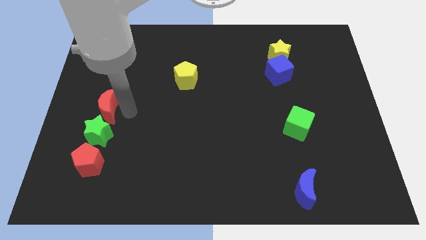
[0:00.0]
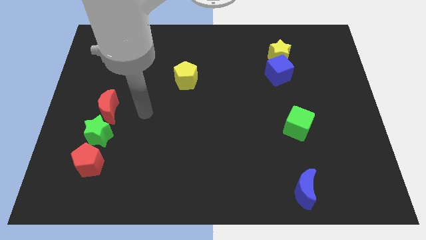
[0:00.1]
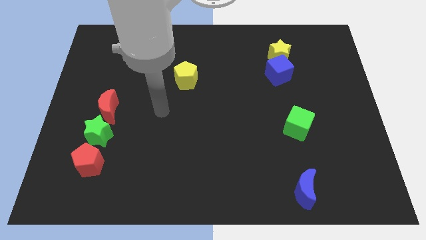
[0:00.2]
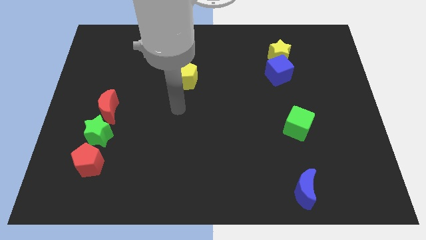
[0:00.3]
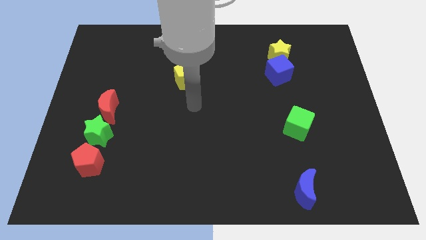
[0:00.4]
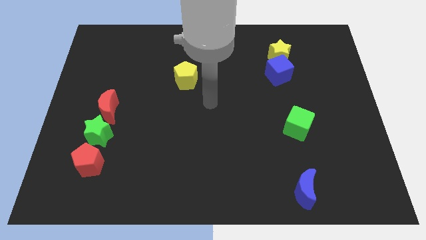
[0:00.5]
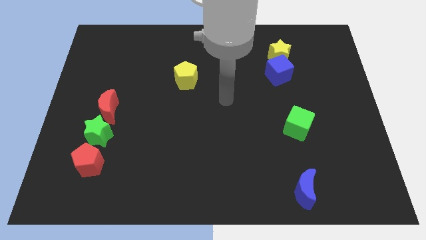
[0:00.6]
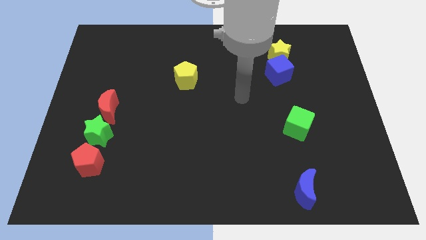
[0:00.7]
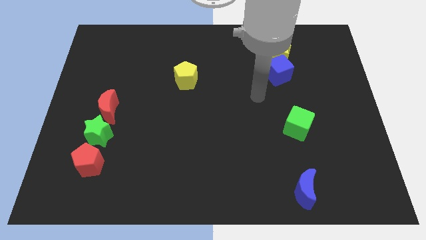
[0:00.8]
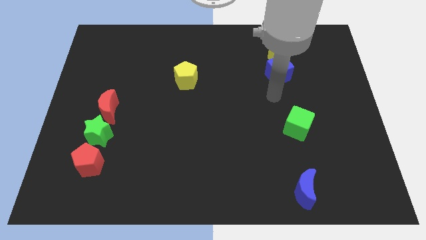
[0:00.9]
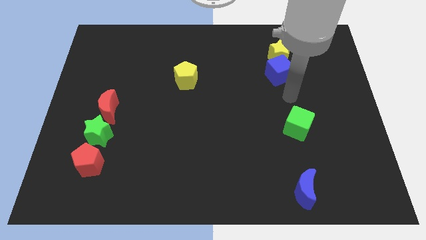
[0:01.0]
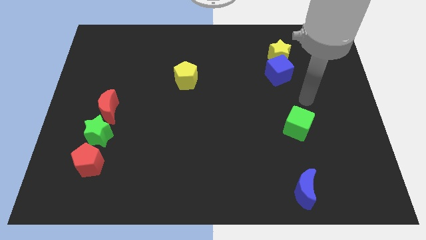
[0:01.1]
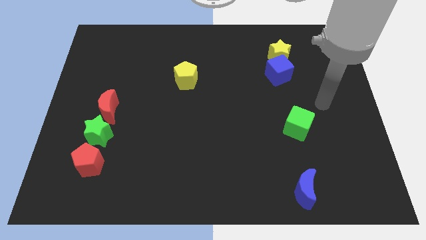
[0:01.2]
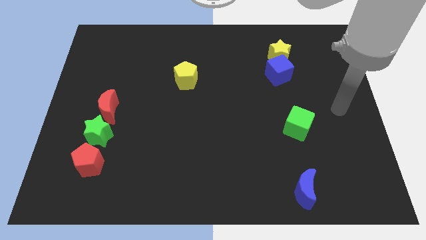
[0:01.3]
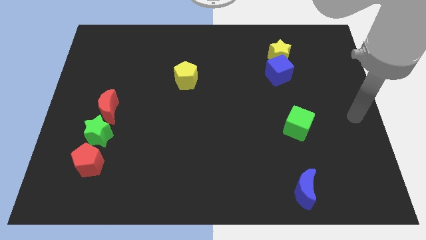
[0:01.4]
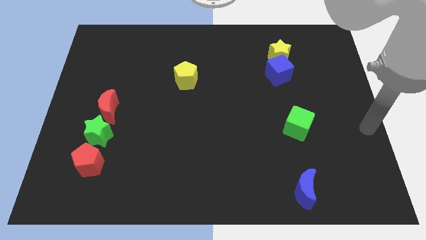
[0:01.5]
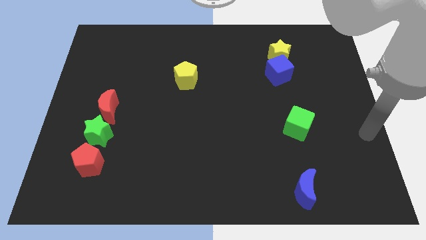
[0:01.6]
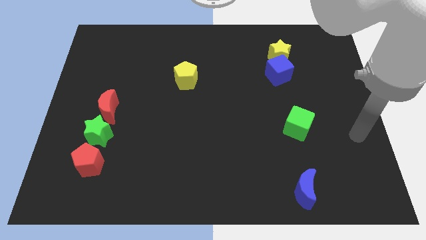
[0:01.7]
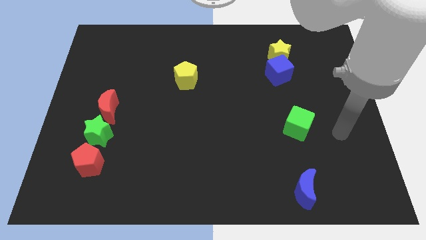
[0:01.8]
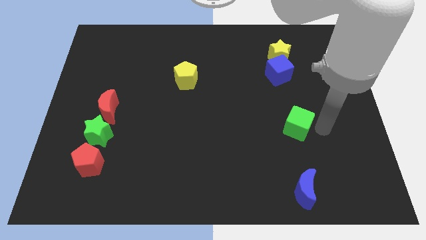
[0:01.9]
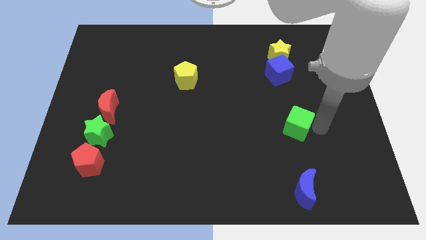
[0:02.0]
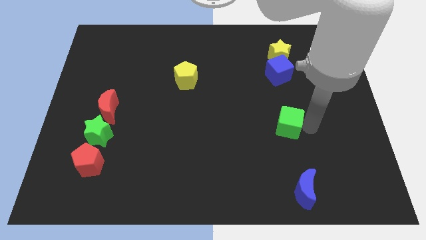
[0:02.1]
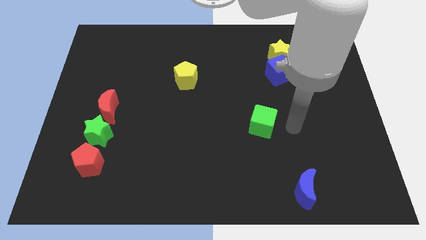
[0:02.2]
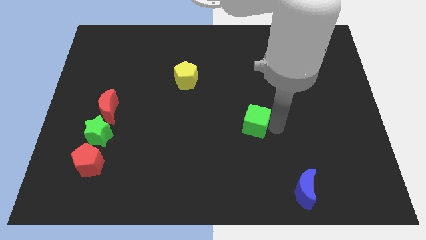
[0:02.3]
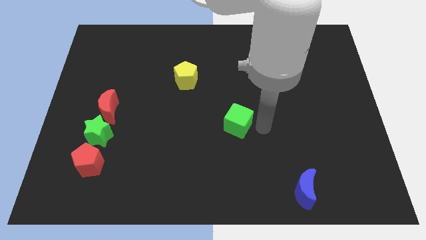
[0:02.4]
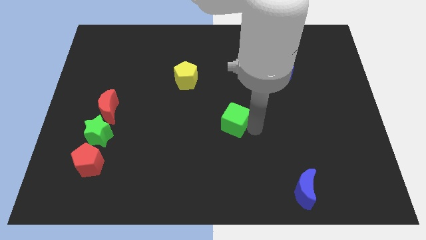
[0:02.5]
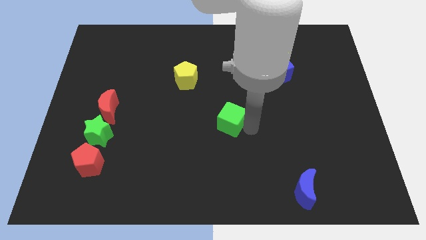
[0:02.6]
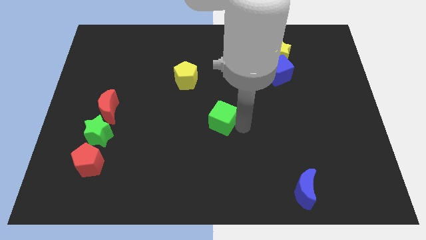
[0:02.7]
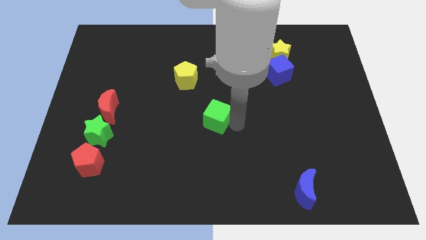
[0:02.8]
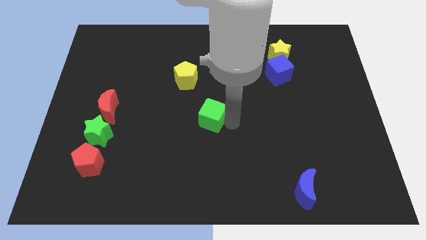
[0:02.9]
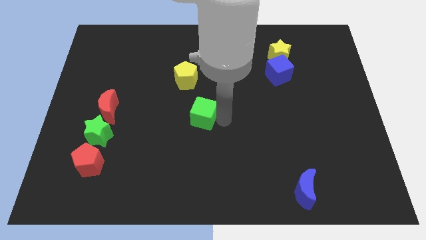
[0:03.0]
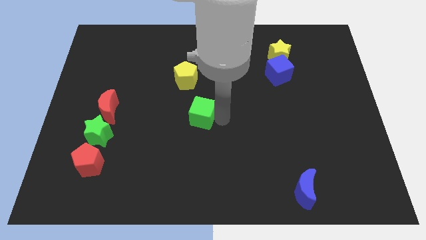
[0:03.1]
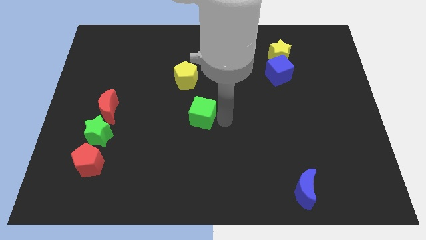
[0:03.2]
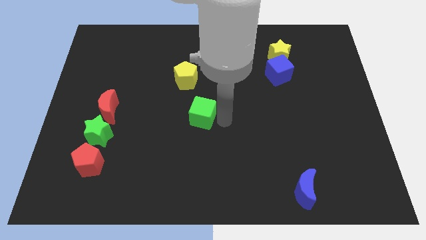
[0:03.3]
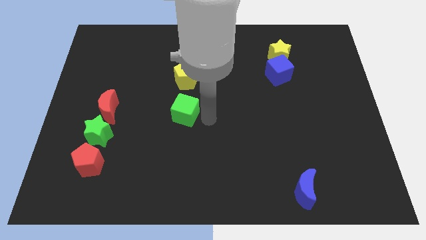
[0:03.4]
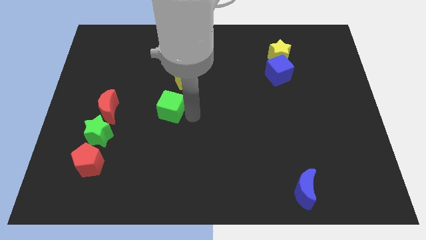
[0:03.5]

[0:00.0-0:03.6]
place the green cube to the bottom of the yellow pentagon

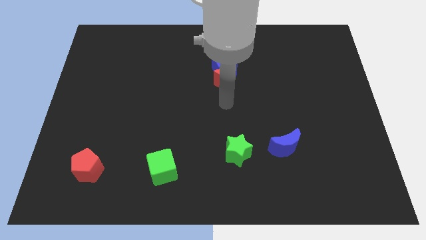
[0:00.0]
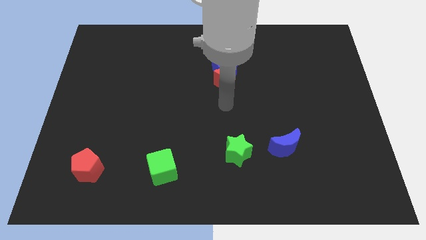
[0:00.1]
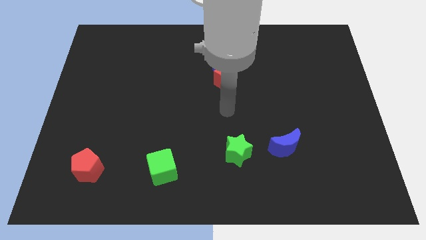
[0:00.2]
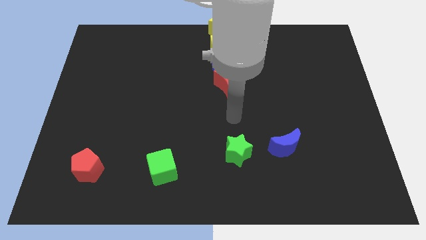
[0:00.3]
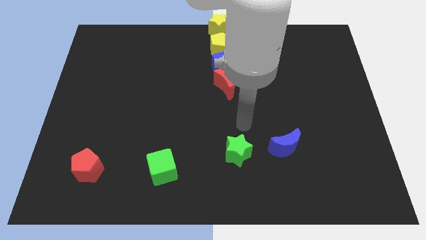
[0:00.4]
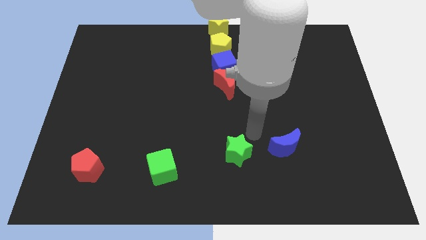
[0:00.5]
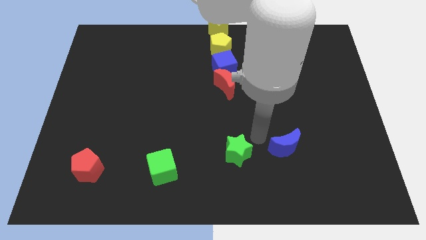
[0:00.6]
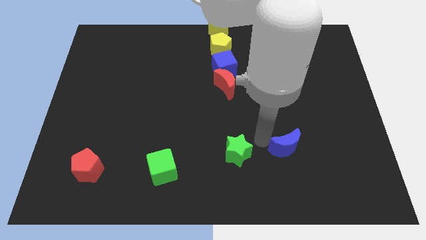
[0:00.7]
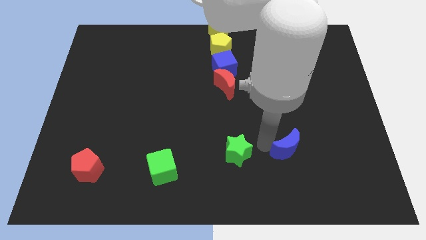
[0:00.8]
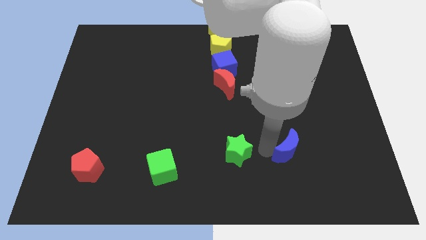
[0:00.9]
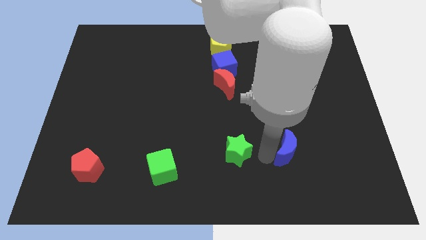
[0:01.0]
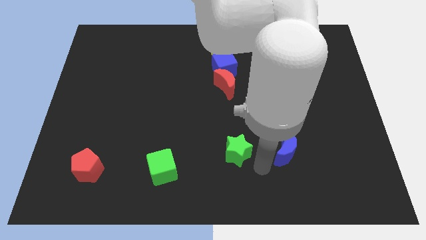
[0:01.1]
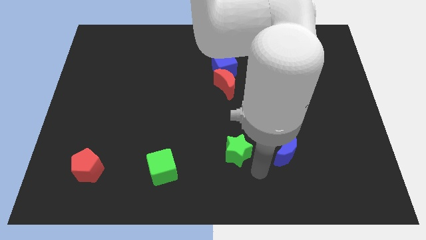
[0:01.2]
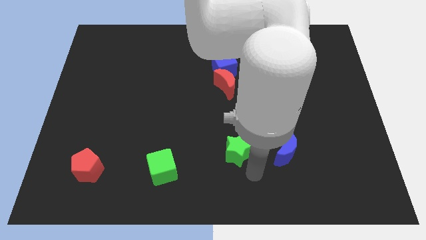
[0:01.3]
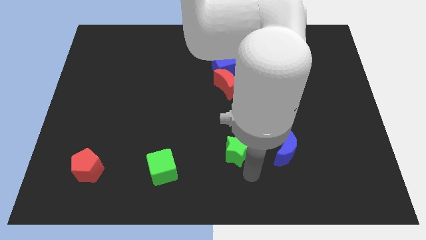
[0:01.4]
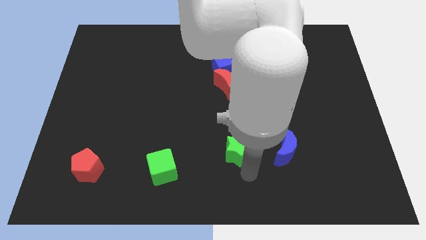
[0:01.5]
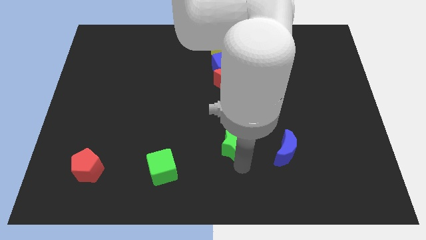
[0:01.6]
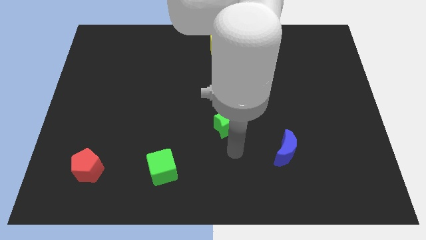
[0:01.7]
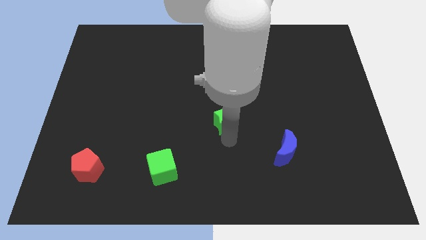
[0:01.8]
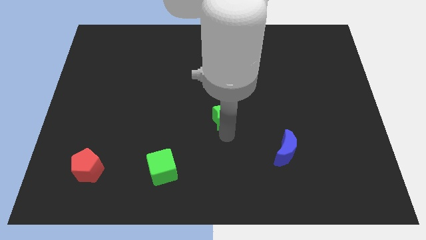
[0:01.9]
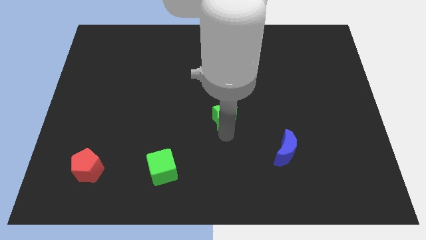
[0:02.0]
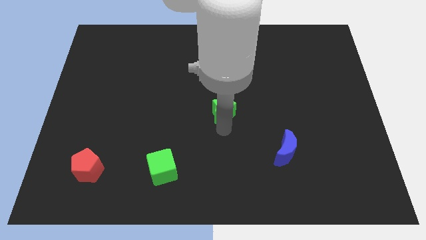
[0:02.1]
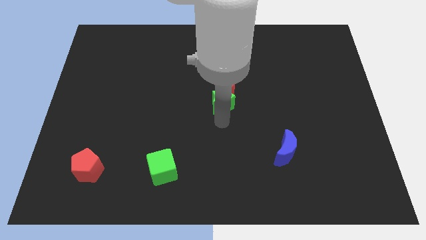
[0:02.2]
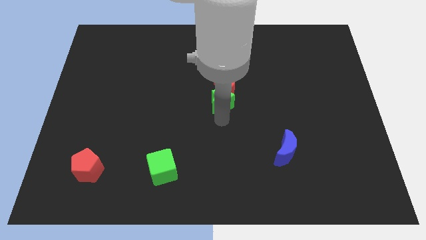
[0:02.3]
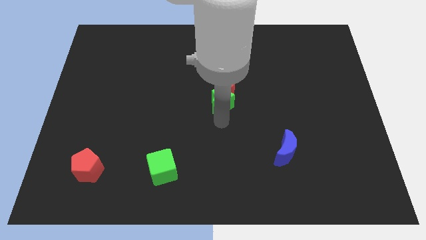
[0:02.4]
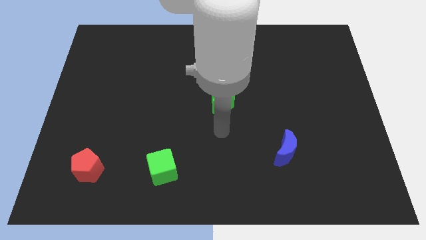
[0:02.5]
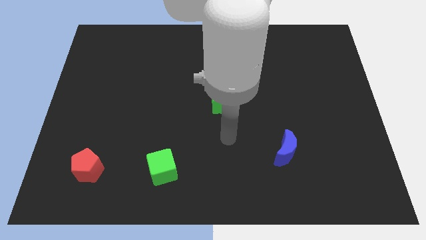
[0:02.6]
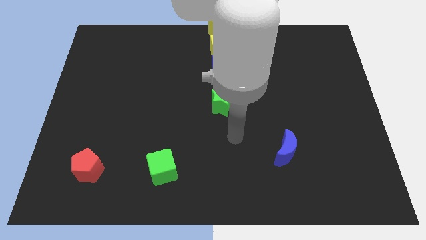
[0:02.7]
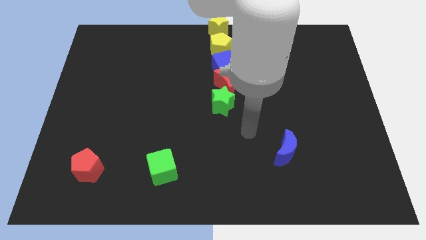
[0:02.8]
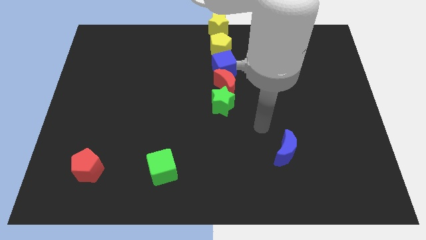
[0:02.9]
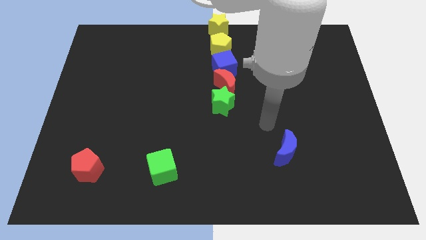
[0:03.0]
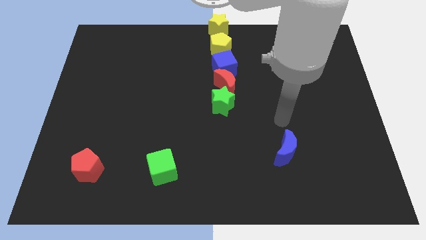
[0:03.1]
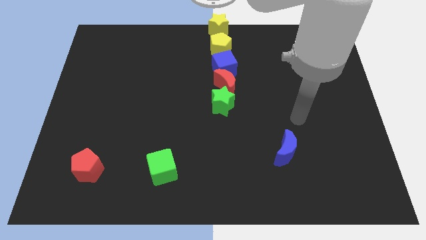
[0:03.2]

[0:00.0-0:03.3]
push the green star into the red crescent

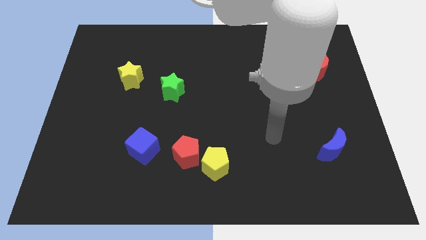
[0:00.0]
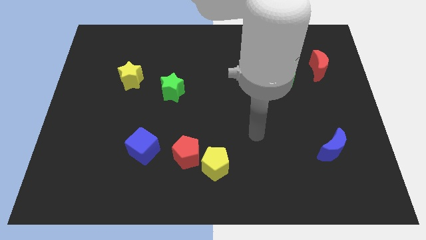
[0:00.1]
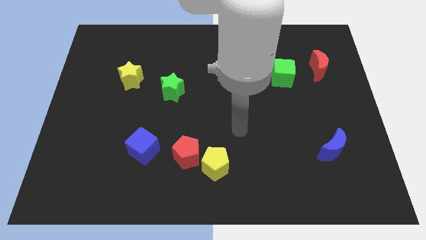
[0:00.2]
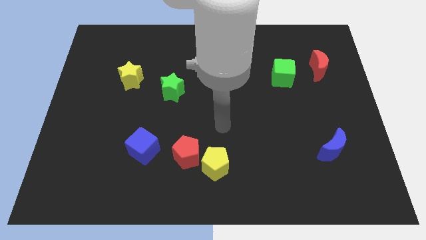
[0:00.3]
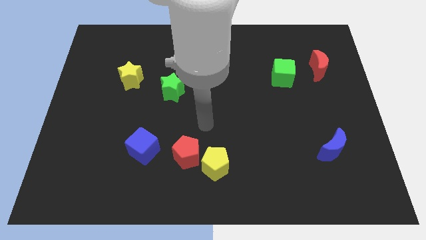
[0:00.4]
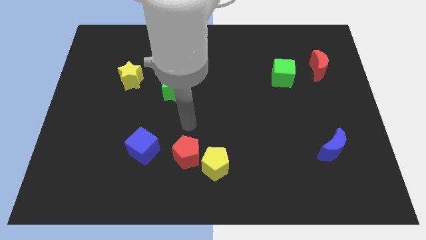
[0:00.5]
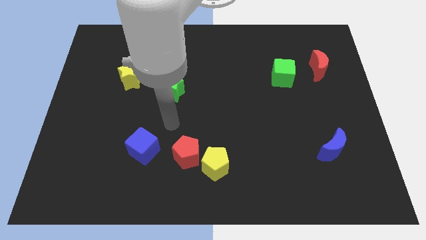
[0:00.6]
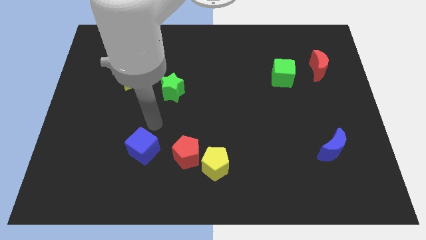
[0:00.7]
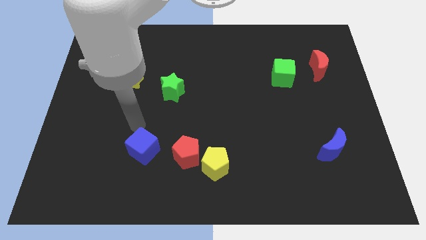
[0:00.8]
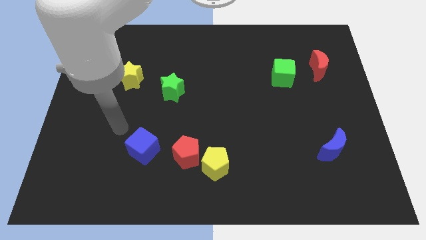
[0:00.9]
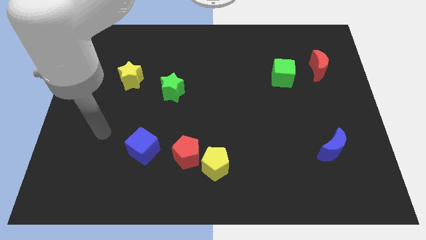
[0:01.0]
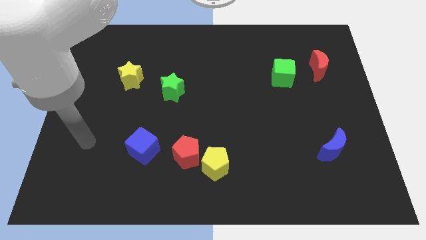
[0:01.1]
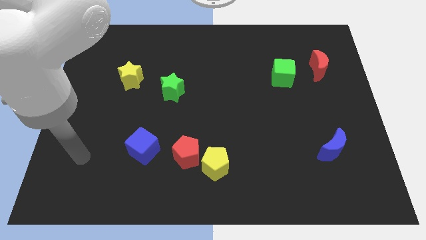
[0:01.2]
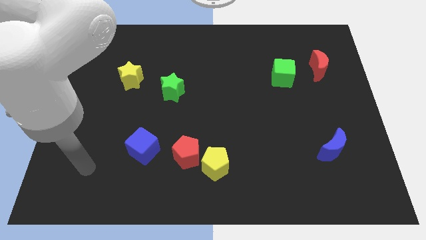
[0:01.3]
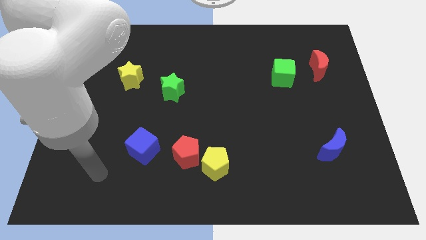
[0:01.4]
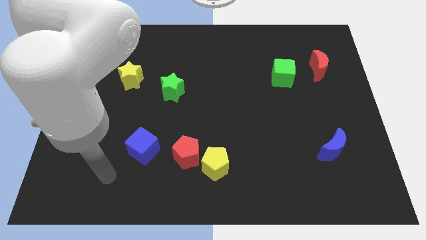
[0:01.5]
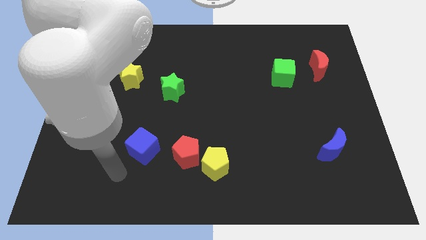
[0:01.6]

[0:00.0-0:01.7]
point your arm below the blue cube

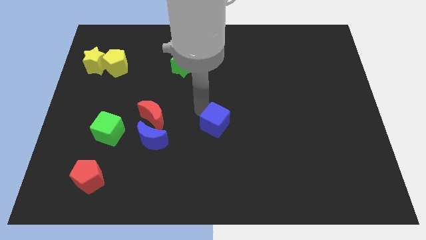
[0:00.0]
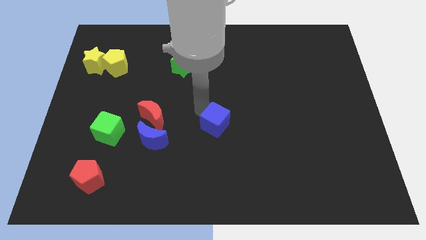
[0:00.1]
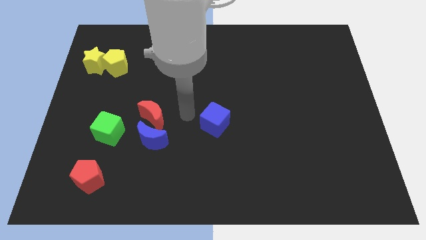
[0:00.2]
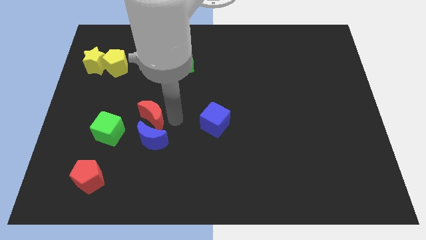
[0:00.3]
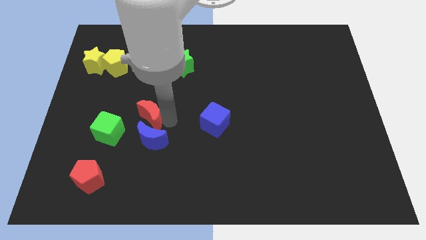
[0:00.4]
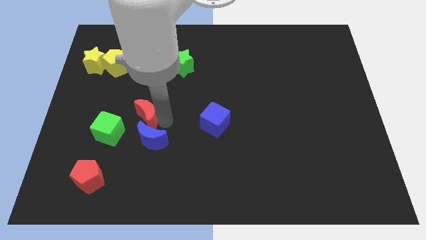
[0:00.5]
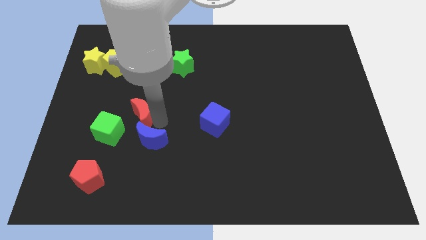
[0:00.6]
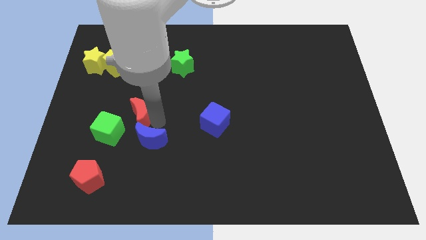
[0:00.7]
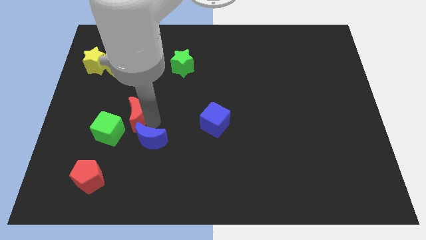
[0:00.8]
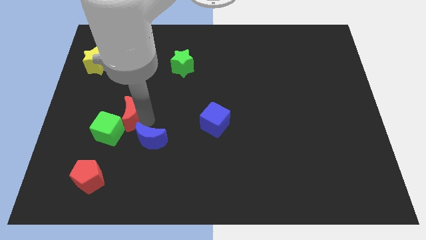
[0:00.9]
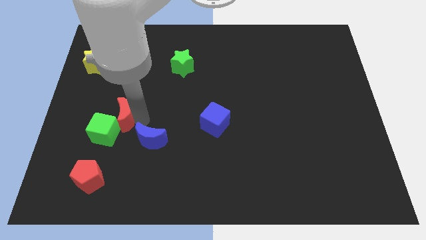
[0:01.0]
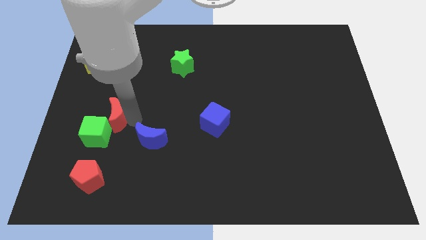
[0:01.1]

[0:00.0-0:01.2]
push the red crescent to the top left of the blue crescent
